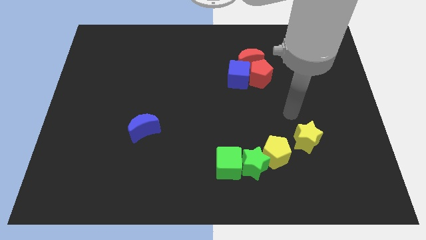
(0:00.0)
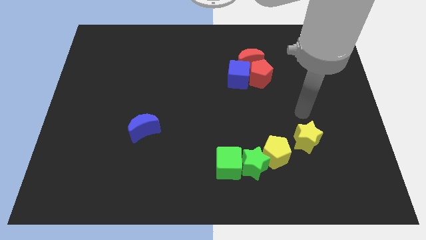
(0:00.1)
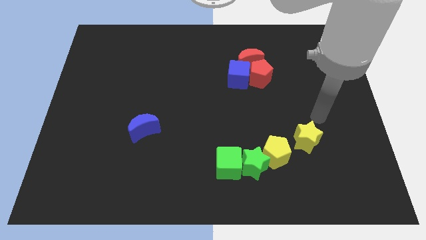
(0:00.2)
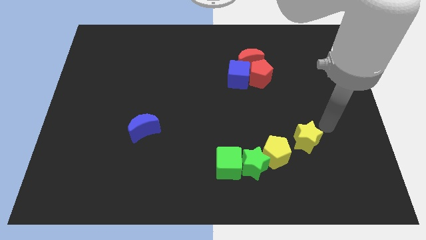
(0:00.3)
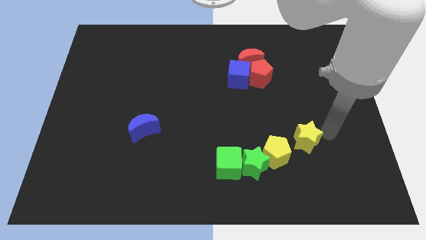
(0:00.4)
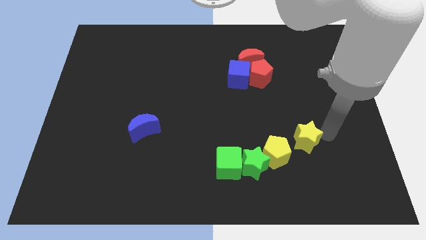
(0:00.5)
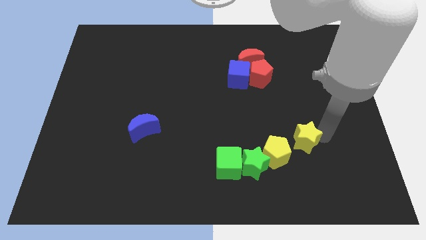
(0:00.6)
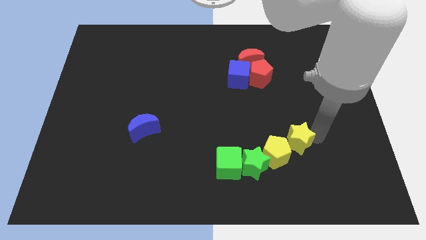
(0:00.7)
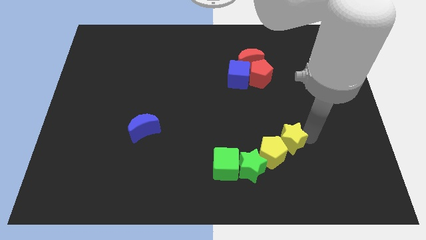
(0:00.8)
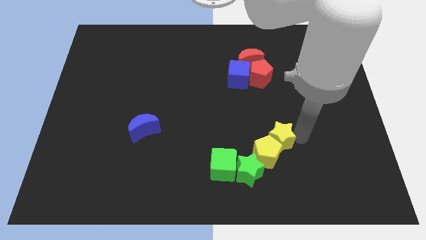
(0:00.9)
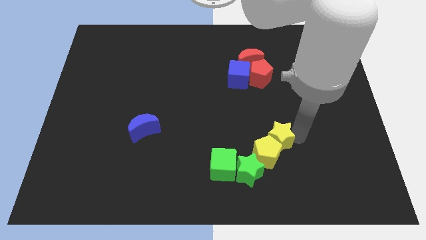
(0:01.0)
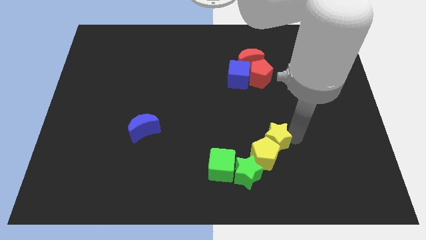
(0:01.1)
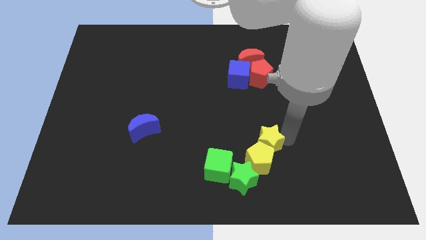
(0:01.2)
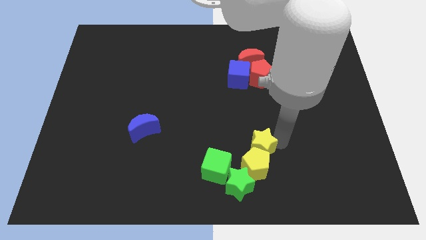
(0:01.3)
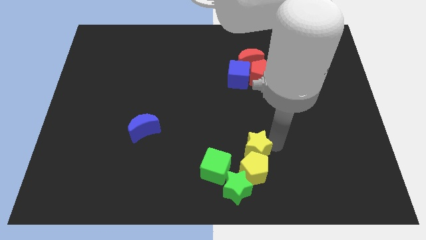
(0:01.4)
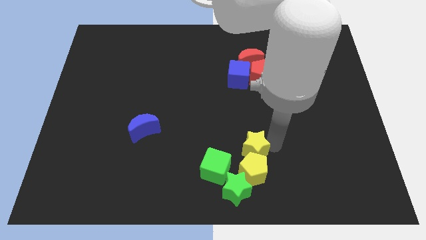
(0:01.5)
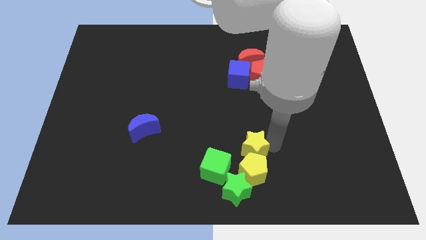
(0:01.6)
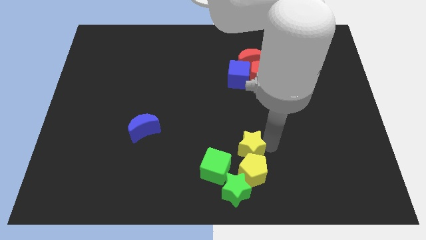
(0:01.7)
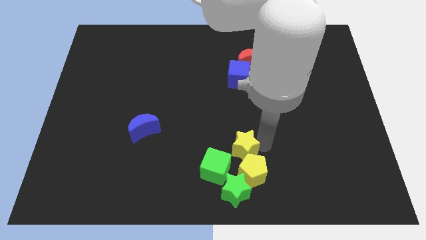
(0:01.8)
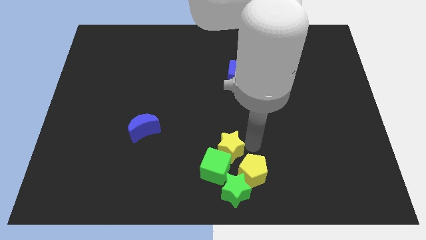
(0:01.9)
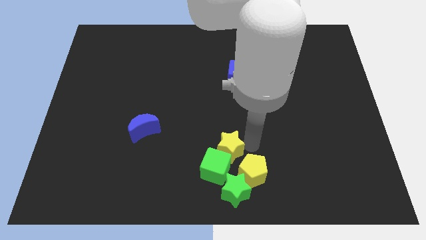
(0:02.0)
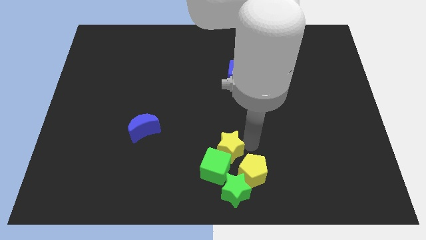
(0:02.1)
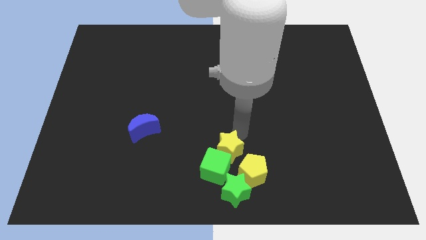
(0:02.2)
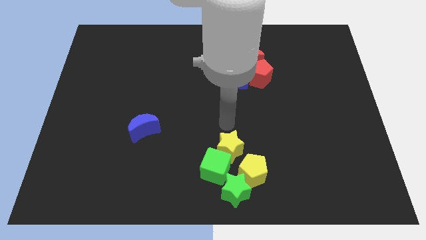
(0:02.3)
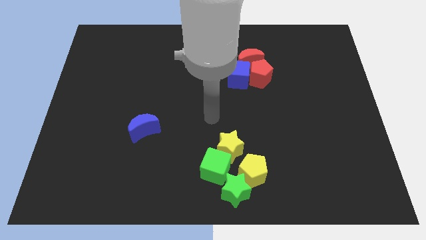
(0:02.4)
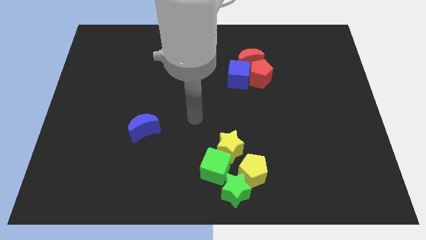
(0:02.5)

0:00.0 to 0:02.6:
move the yellow star into the yellow pentagon

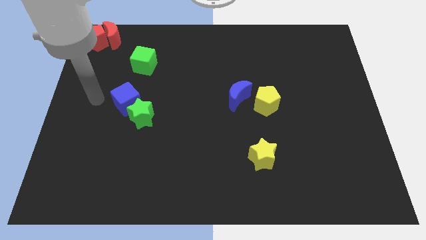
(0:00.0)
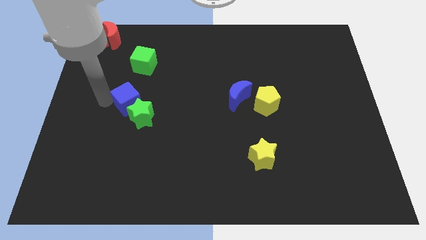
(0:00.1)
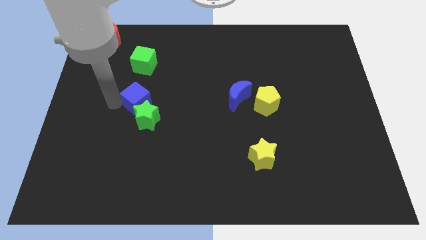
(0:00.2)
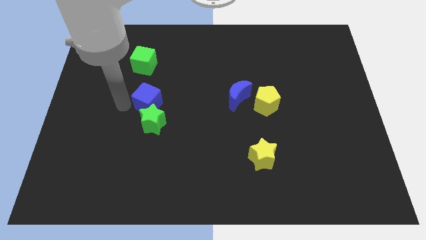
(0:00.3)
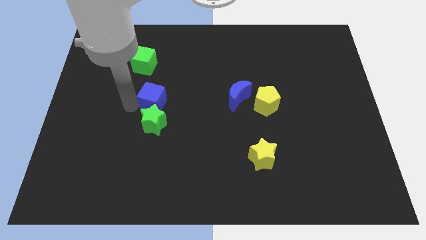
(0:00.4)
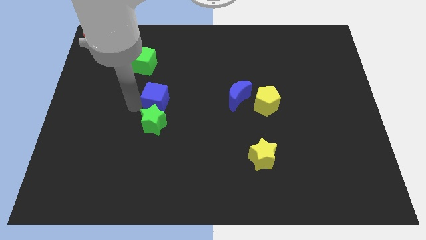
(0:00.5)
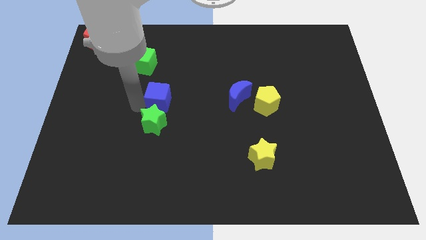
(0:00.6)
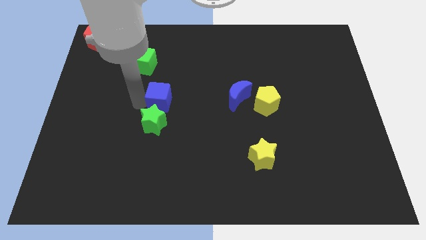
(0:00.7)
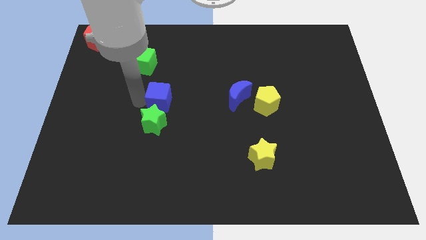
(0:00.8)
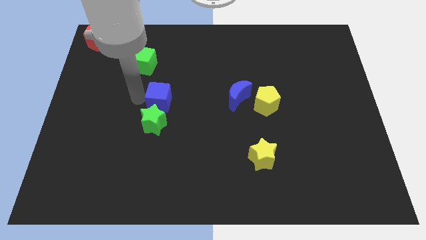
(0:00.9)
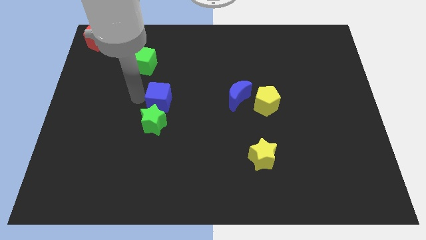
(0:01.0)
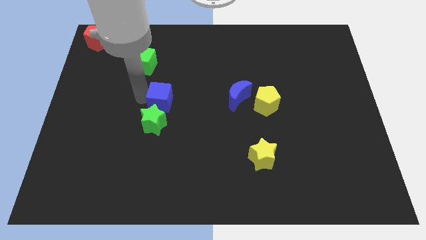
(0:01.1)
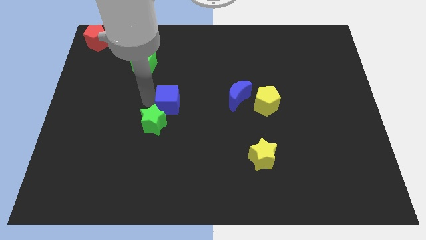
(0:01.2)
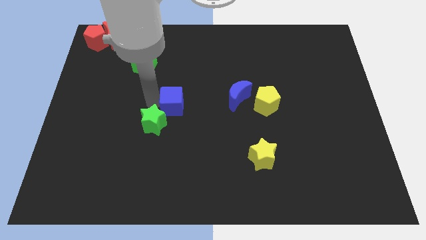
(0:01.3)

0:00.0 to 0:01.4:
drag the blue cube towards the center of the board

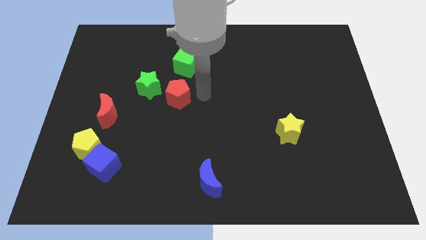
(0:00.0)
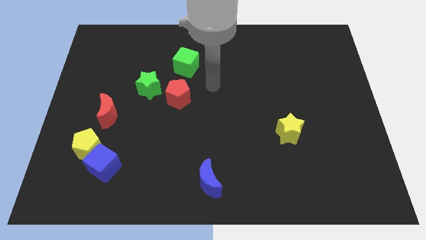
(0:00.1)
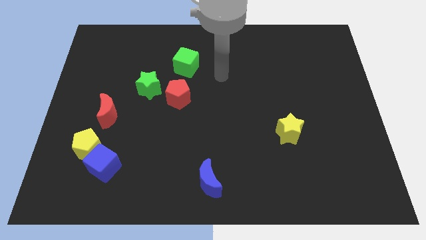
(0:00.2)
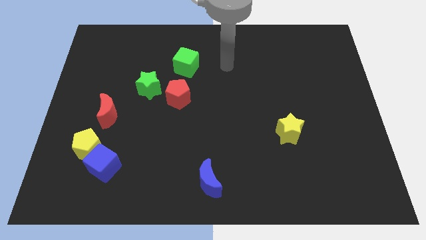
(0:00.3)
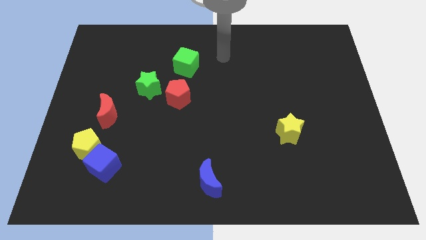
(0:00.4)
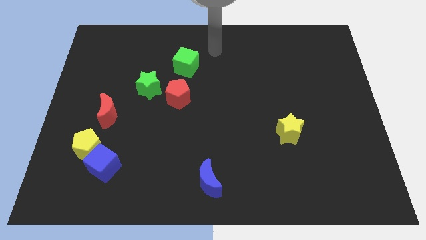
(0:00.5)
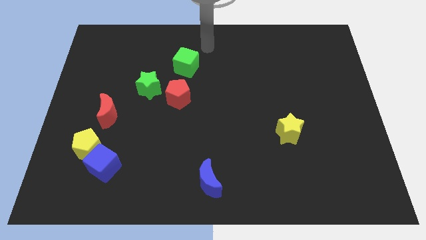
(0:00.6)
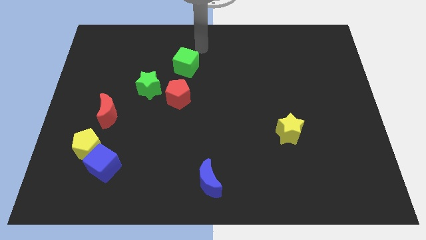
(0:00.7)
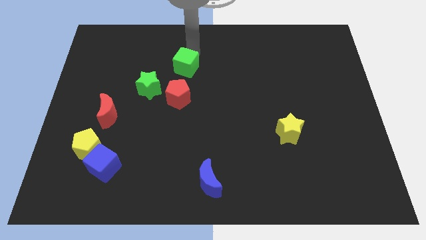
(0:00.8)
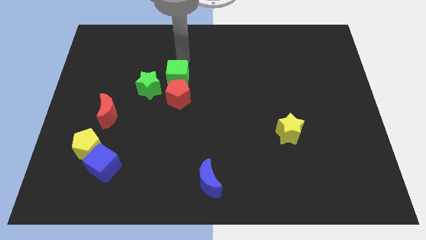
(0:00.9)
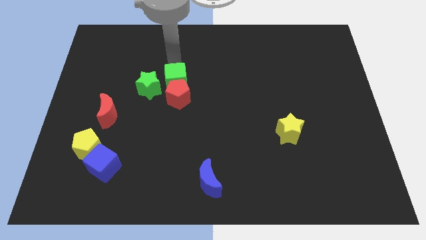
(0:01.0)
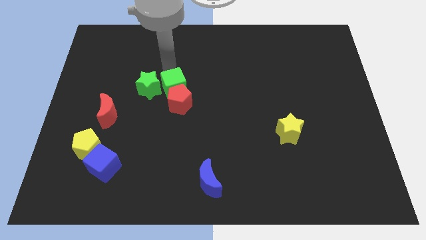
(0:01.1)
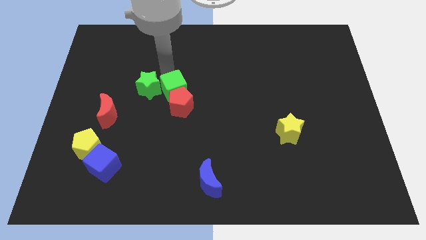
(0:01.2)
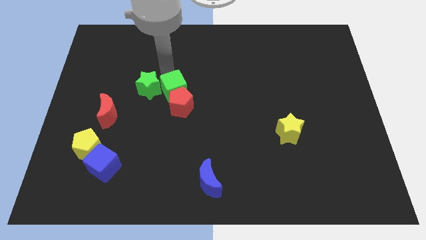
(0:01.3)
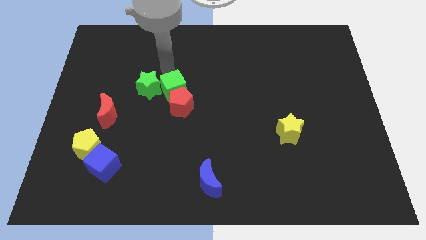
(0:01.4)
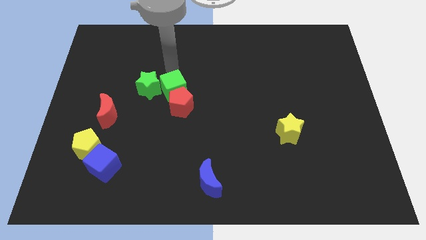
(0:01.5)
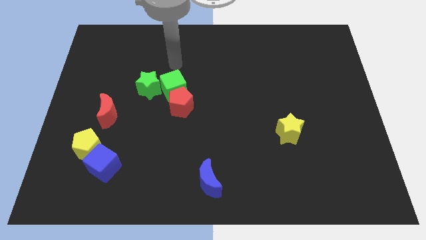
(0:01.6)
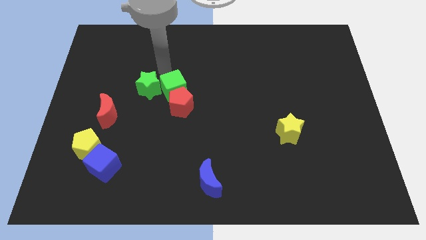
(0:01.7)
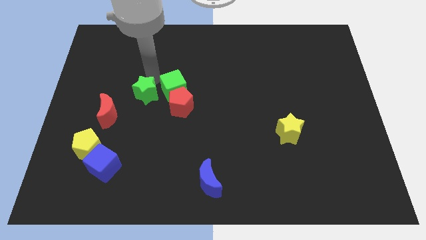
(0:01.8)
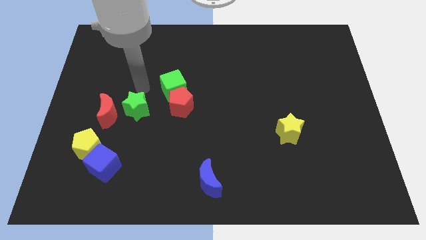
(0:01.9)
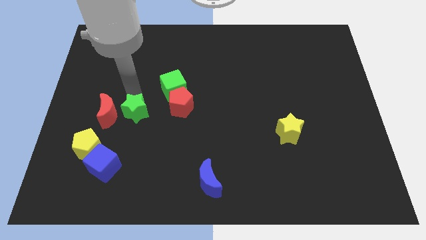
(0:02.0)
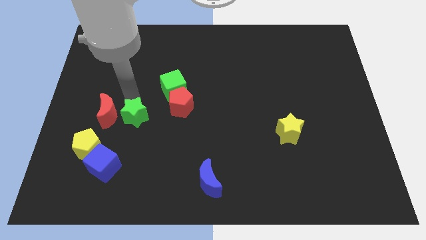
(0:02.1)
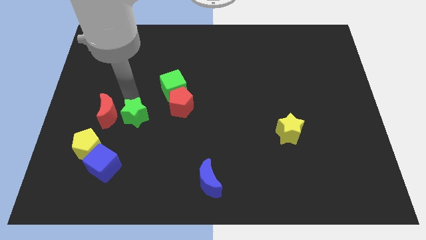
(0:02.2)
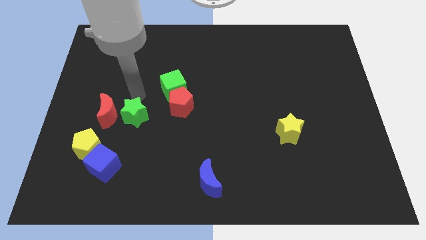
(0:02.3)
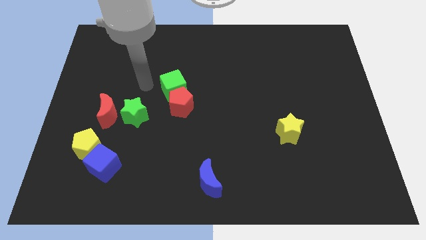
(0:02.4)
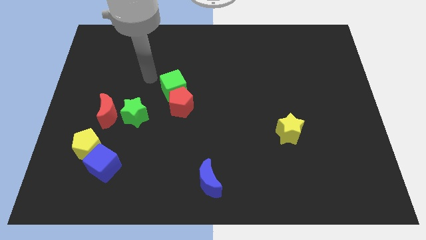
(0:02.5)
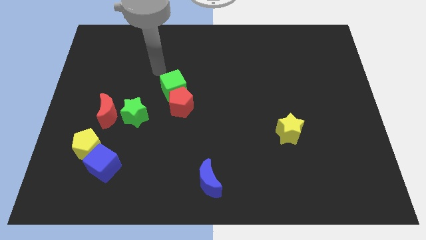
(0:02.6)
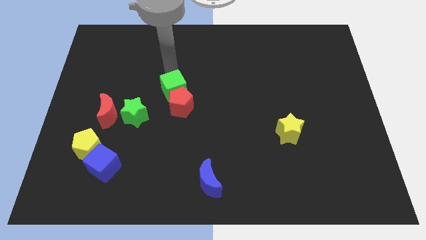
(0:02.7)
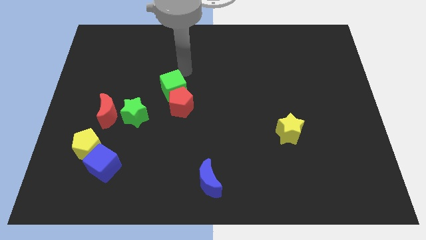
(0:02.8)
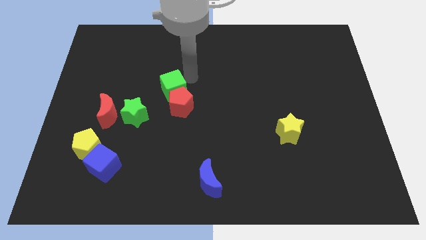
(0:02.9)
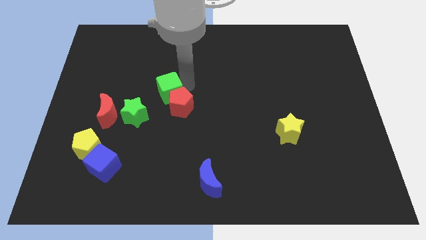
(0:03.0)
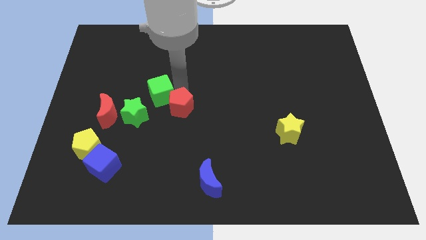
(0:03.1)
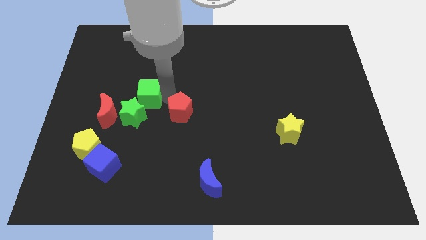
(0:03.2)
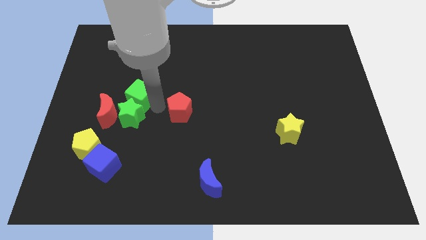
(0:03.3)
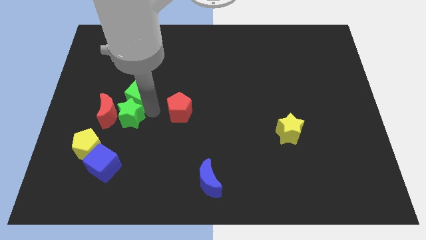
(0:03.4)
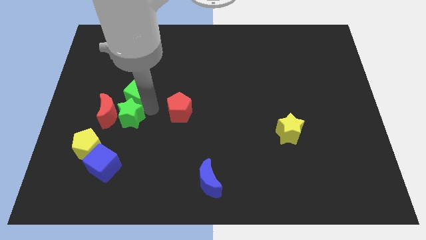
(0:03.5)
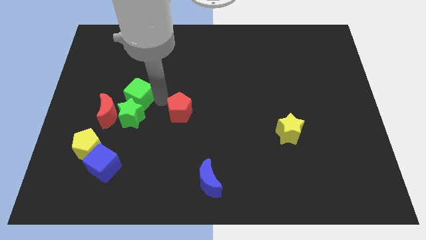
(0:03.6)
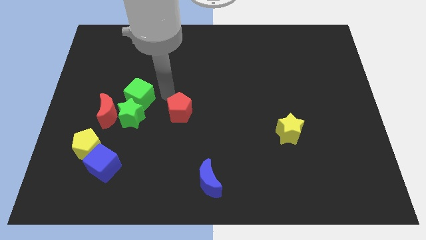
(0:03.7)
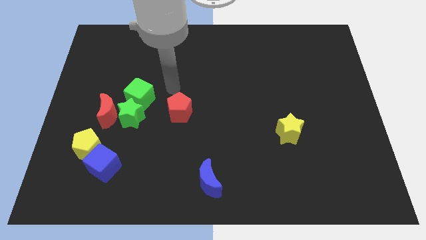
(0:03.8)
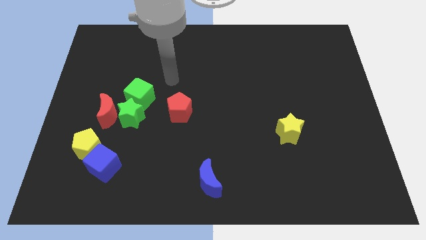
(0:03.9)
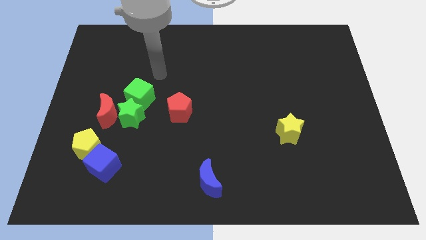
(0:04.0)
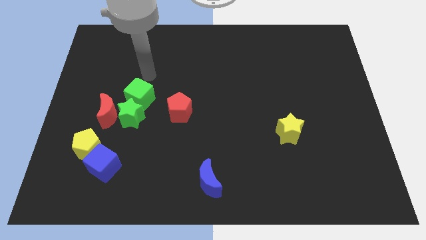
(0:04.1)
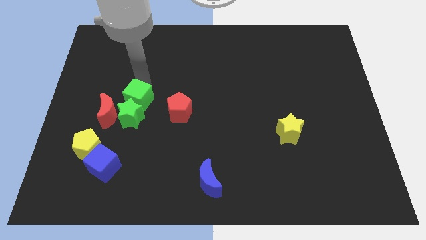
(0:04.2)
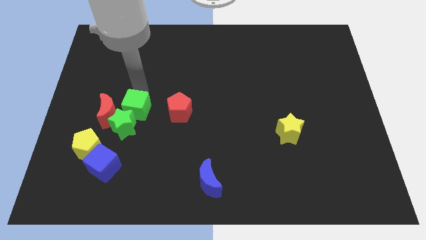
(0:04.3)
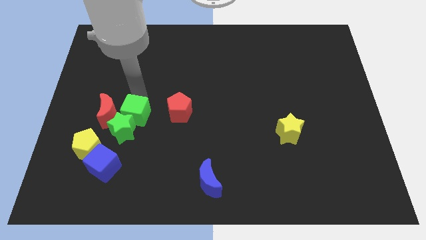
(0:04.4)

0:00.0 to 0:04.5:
push the green cube into the green star

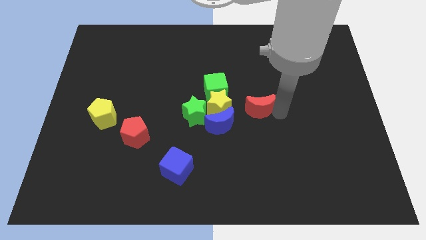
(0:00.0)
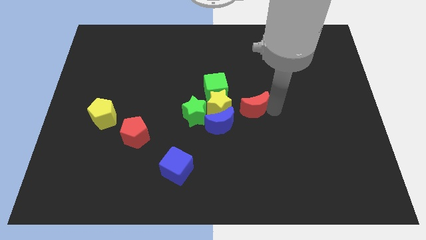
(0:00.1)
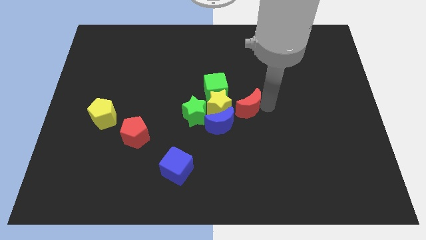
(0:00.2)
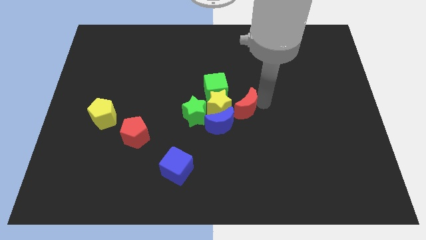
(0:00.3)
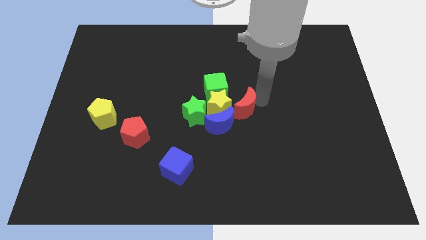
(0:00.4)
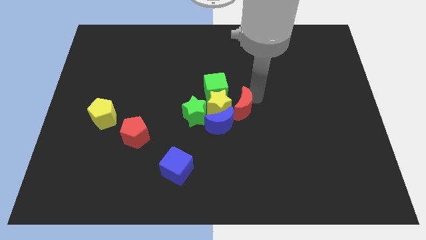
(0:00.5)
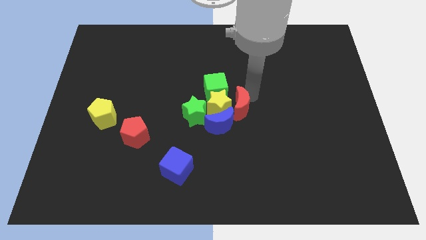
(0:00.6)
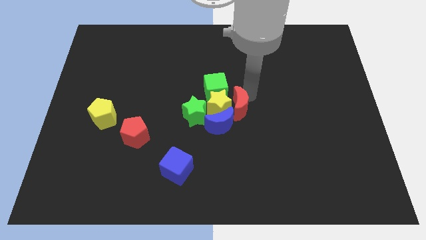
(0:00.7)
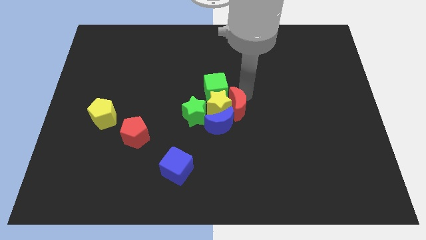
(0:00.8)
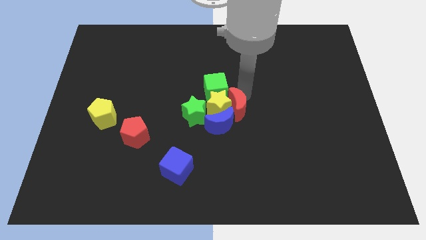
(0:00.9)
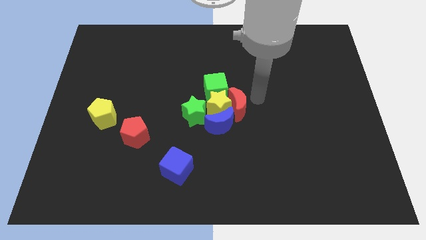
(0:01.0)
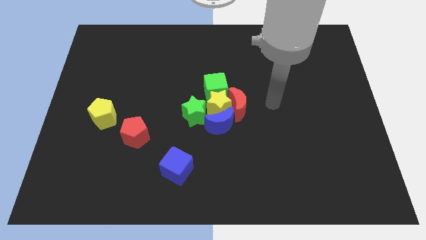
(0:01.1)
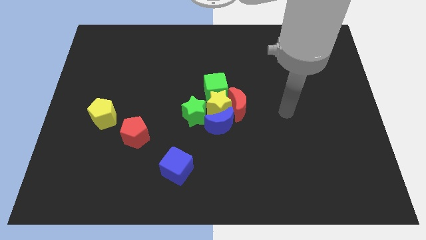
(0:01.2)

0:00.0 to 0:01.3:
push the red moon into the yellow star
